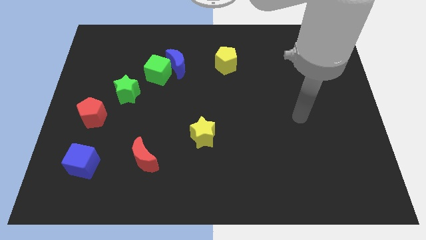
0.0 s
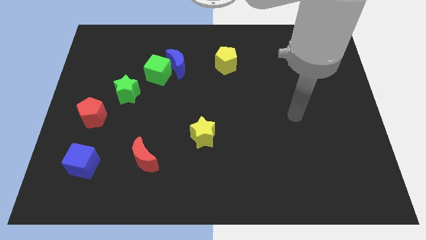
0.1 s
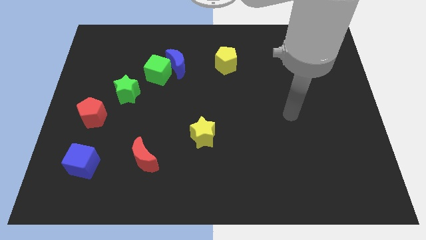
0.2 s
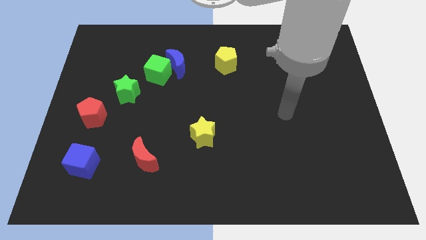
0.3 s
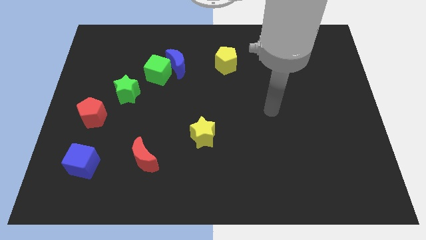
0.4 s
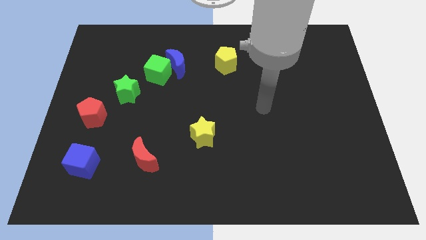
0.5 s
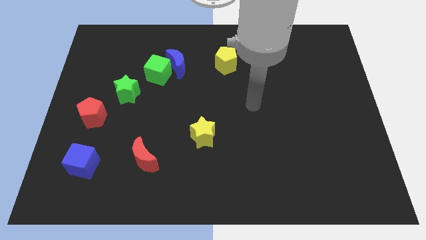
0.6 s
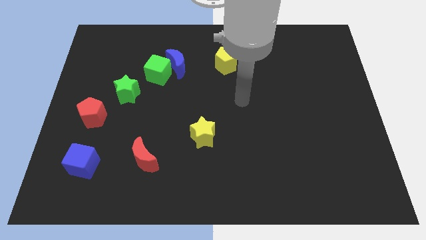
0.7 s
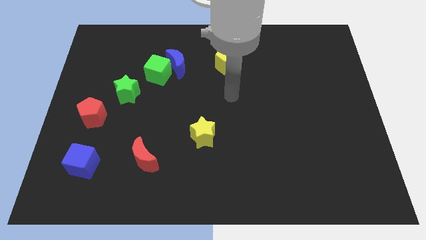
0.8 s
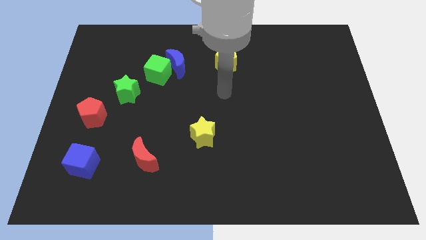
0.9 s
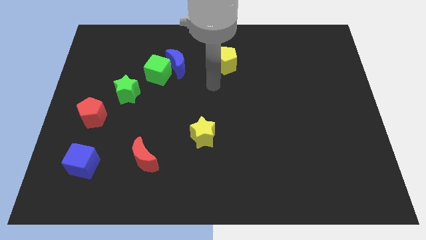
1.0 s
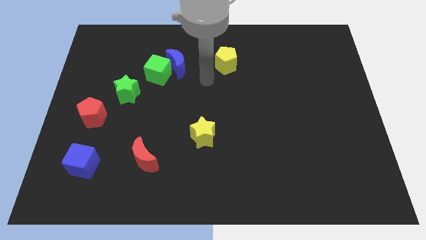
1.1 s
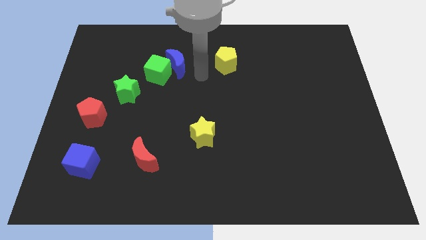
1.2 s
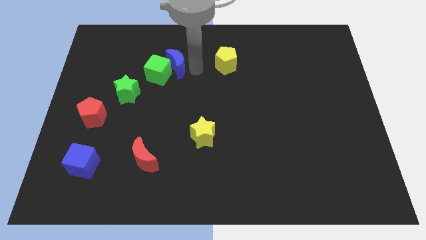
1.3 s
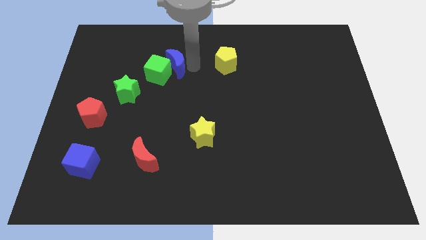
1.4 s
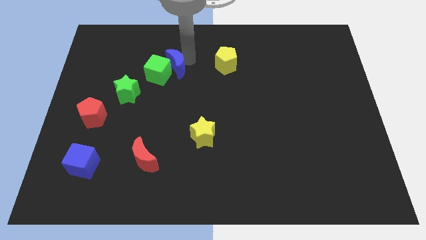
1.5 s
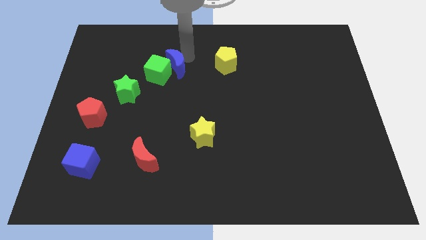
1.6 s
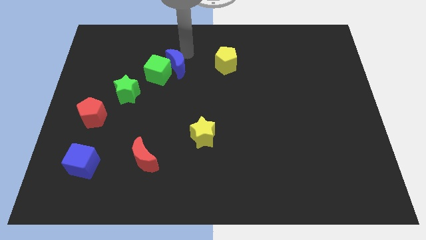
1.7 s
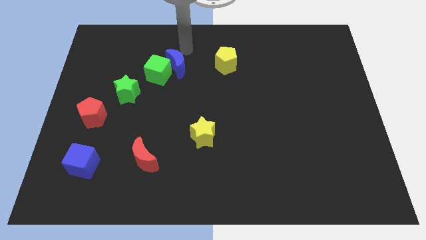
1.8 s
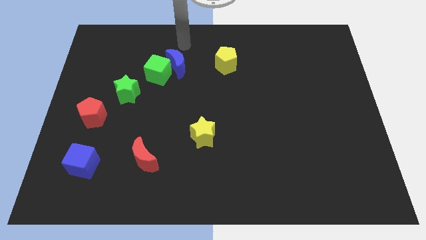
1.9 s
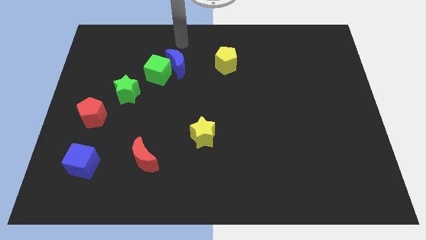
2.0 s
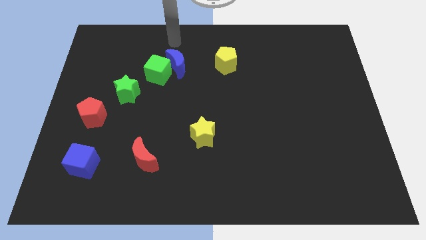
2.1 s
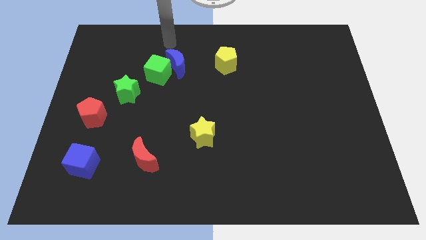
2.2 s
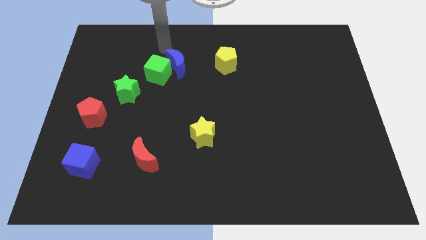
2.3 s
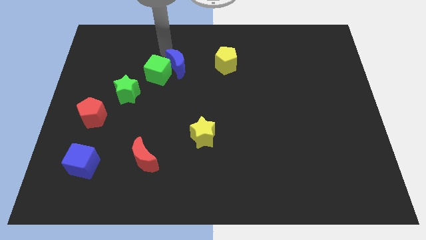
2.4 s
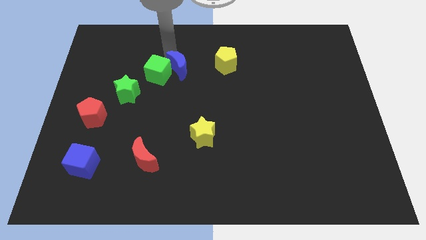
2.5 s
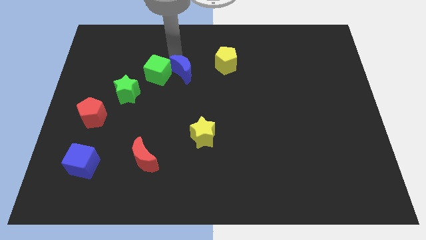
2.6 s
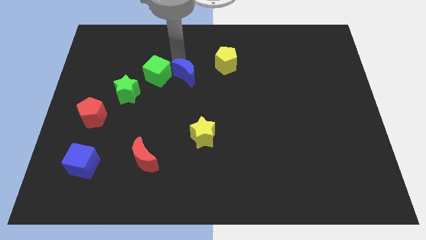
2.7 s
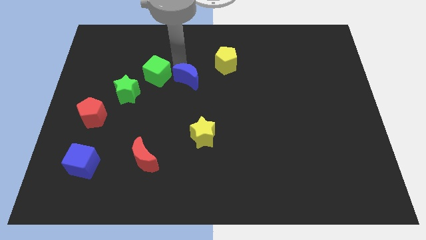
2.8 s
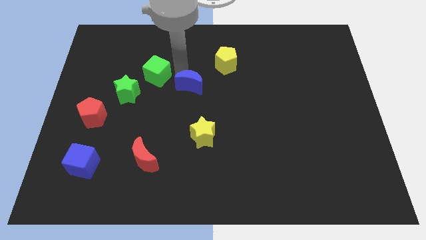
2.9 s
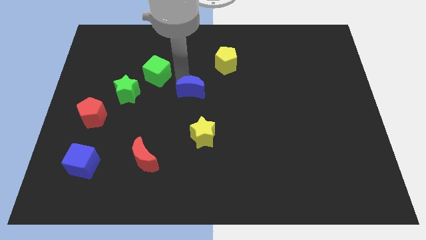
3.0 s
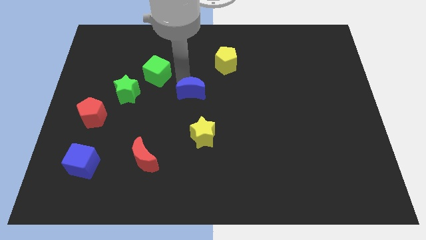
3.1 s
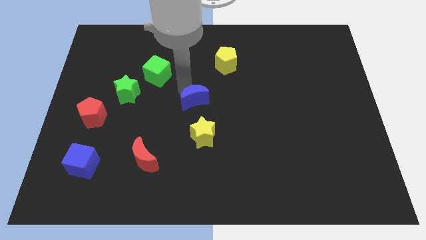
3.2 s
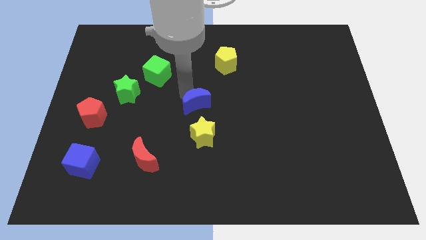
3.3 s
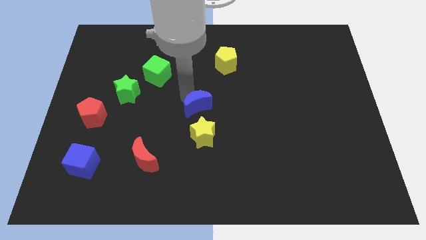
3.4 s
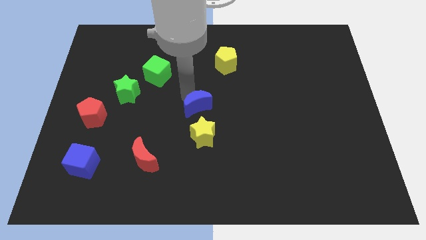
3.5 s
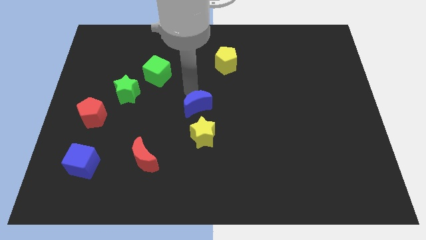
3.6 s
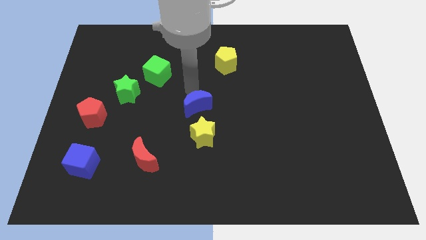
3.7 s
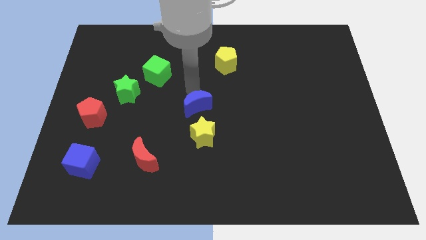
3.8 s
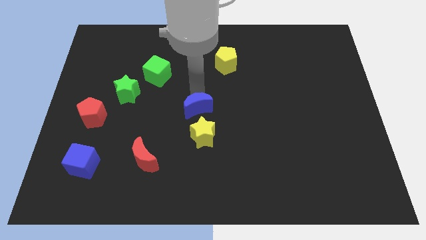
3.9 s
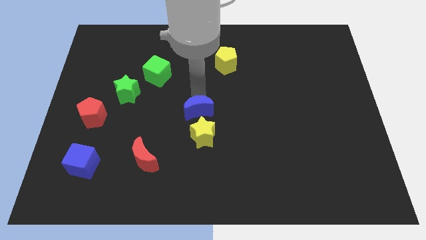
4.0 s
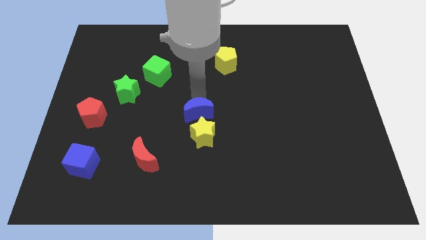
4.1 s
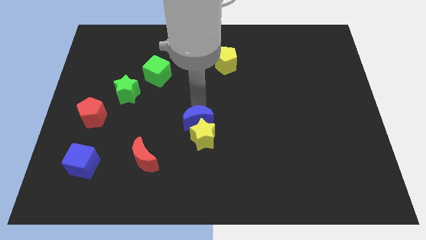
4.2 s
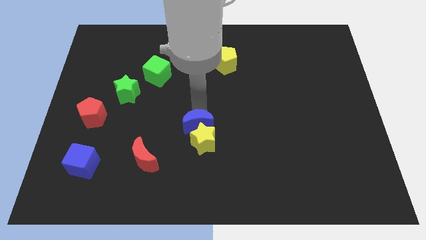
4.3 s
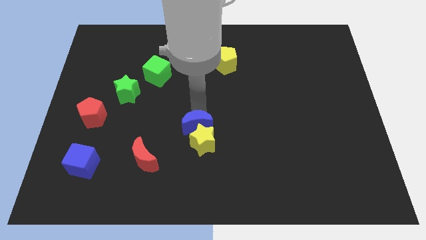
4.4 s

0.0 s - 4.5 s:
put the blue moon to the yellow star

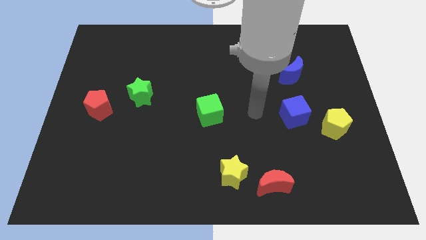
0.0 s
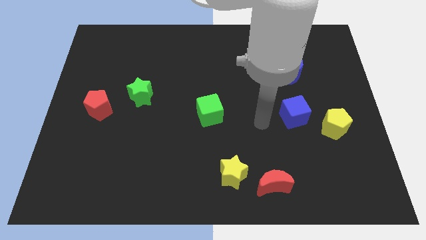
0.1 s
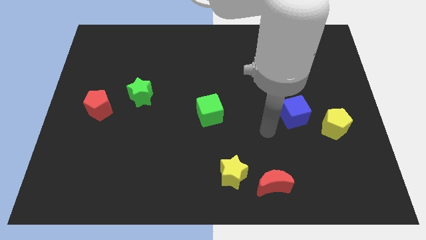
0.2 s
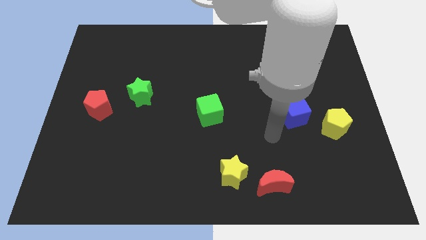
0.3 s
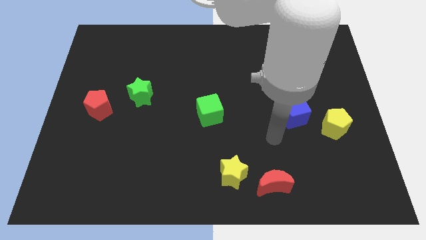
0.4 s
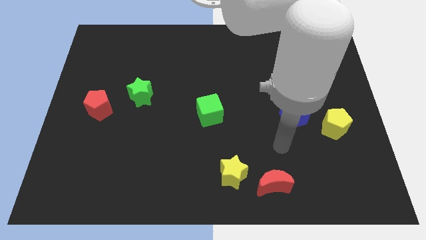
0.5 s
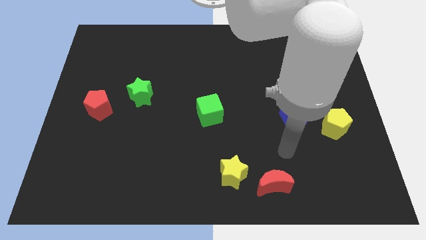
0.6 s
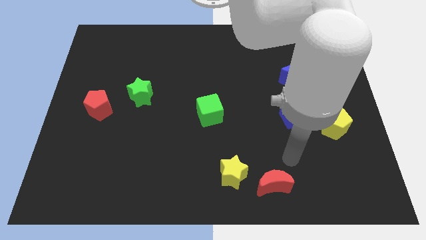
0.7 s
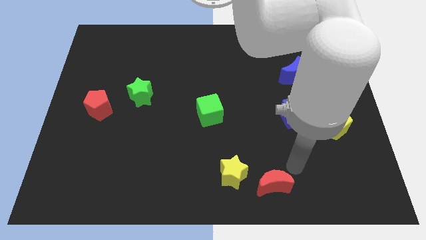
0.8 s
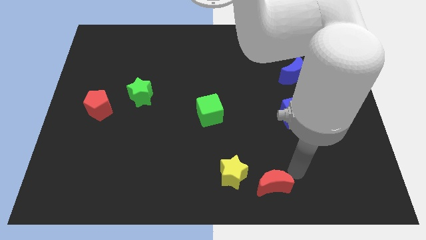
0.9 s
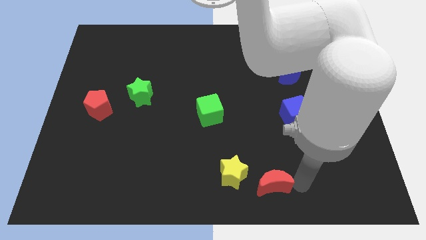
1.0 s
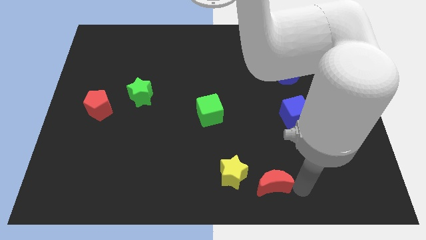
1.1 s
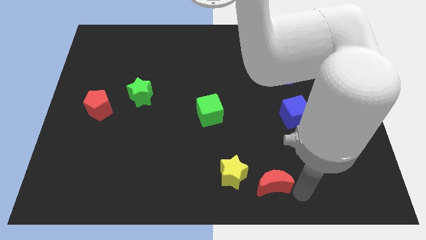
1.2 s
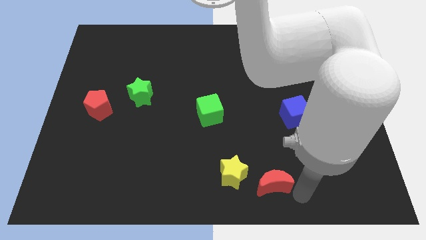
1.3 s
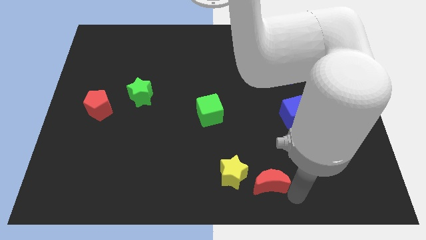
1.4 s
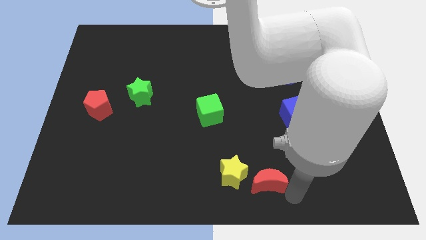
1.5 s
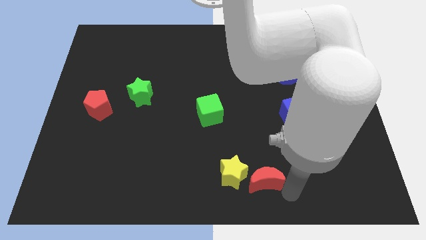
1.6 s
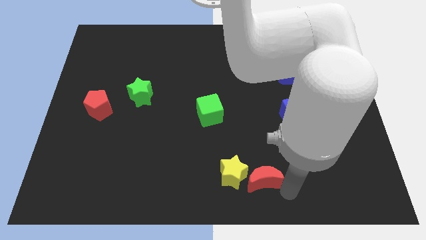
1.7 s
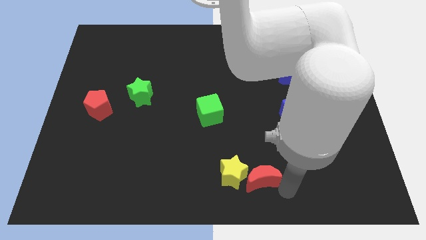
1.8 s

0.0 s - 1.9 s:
put the red moon towards the yellow star

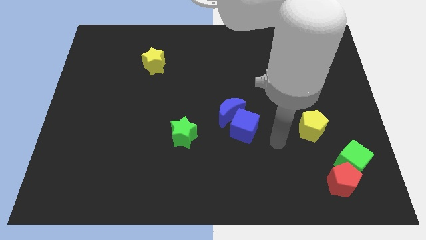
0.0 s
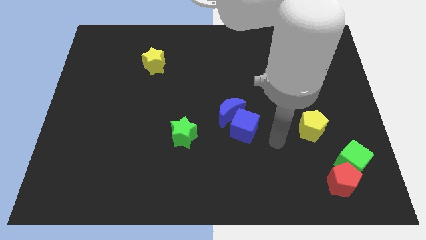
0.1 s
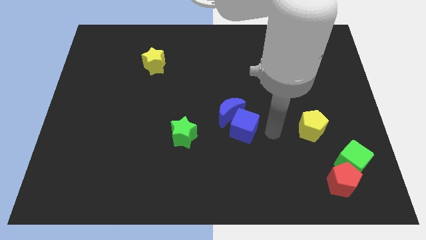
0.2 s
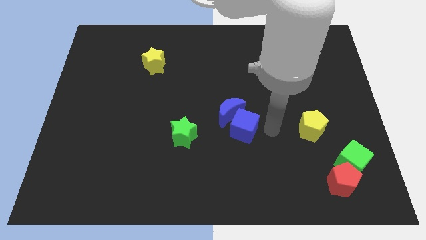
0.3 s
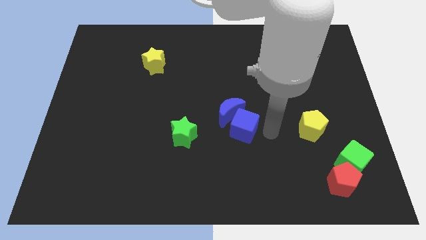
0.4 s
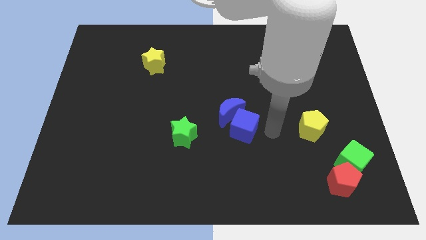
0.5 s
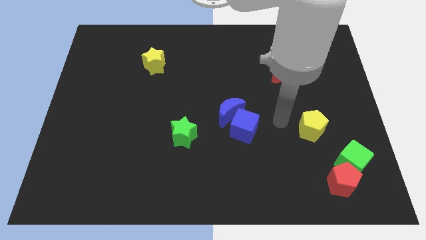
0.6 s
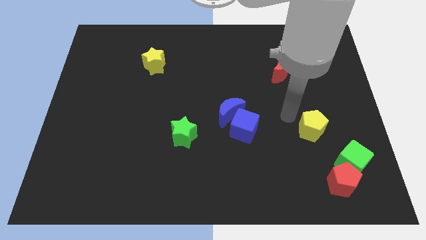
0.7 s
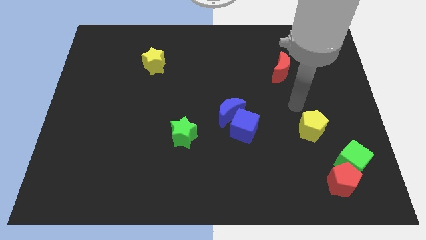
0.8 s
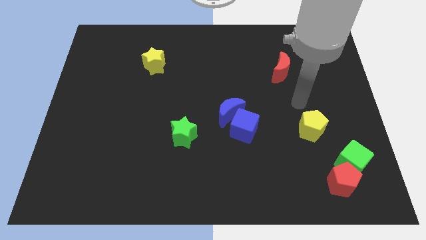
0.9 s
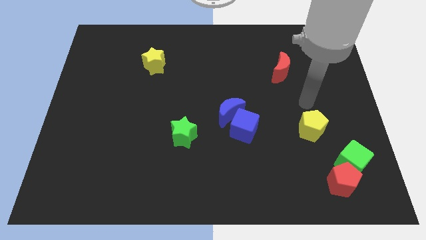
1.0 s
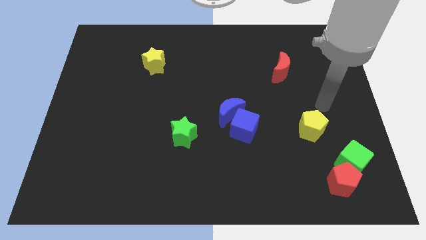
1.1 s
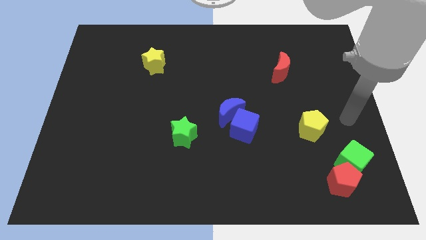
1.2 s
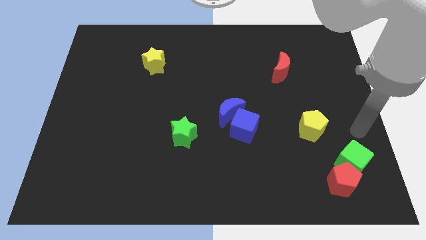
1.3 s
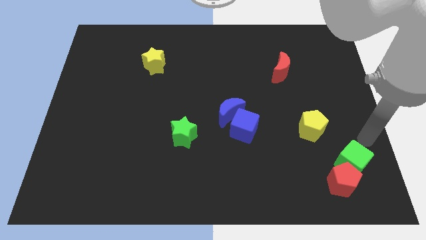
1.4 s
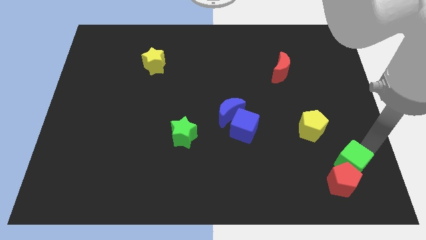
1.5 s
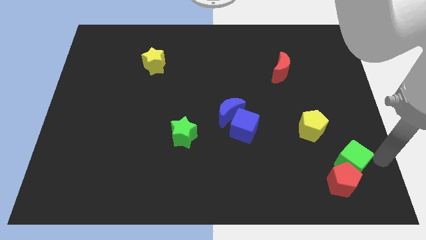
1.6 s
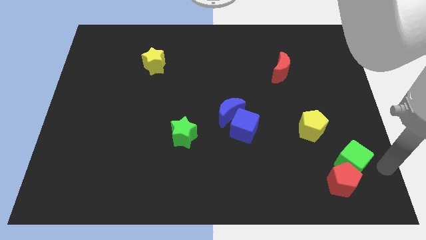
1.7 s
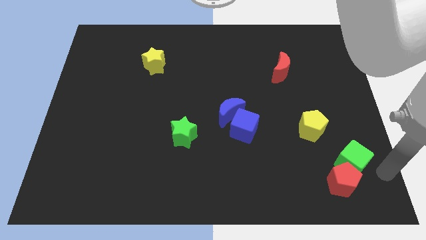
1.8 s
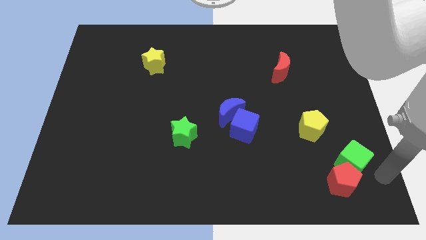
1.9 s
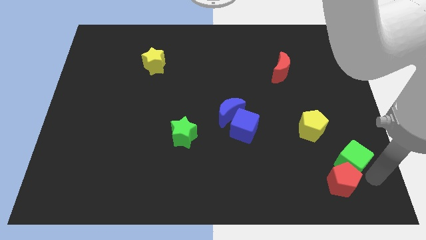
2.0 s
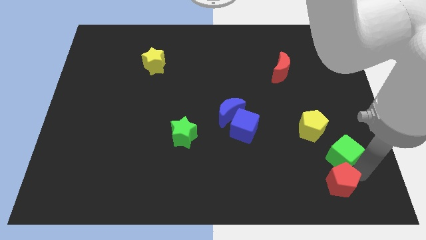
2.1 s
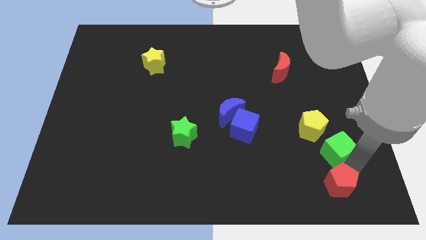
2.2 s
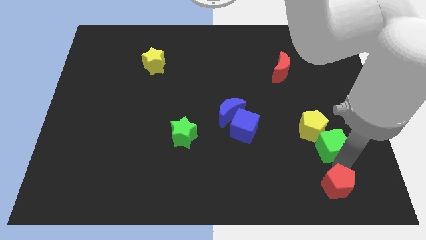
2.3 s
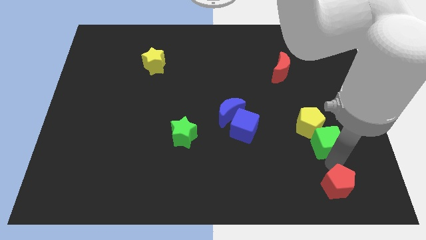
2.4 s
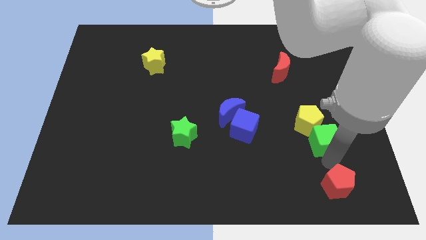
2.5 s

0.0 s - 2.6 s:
put the green cube to the yellow pentagon
